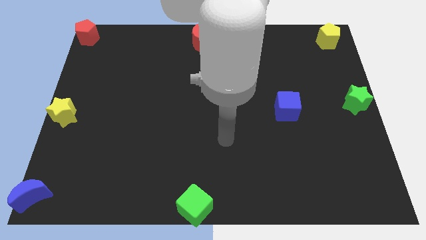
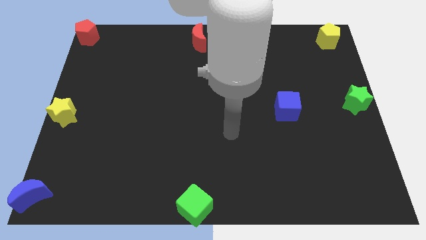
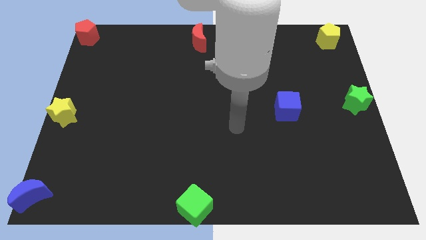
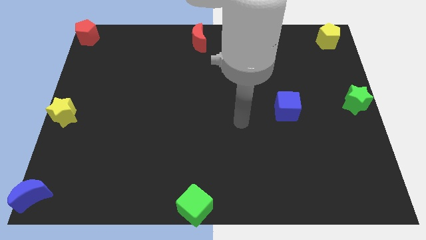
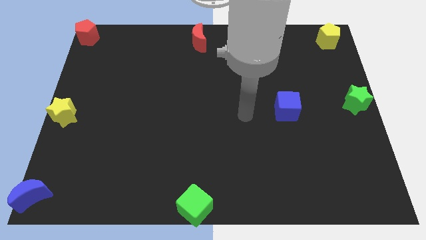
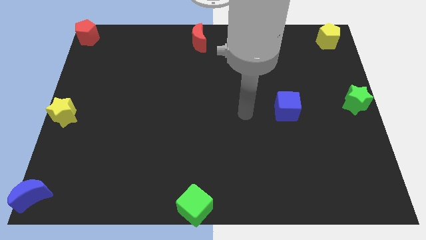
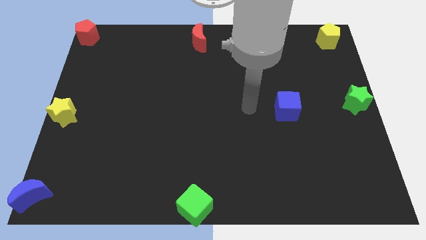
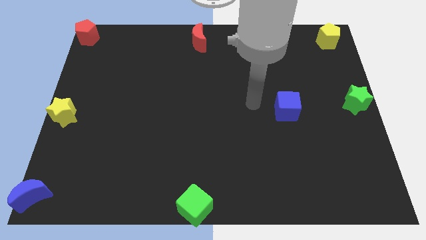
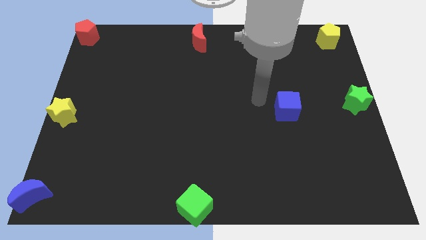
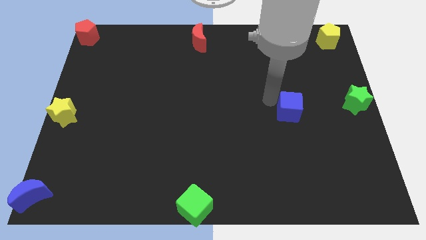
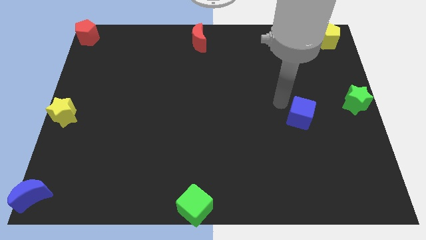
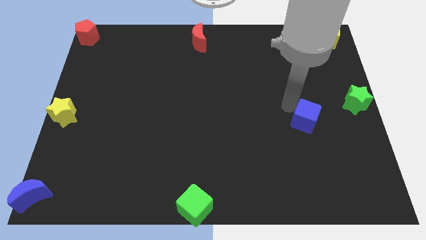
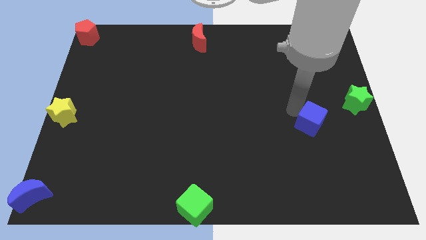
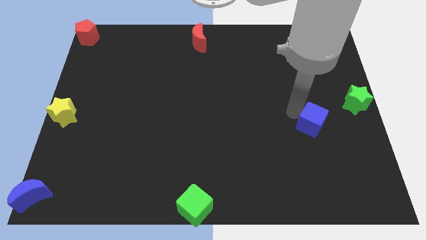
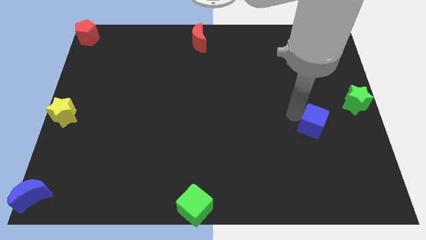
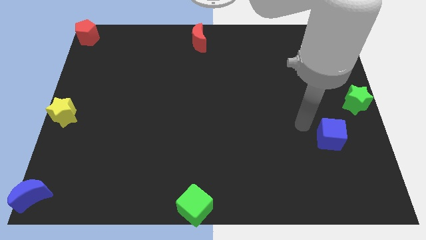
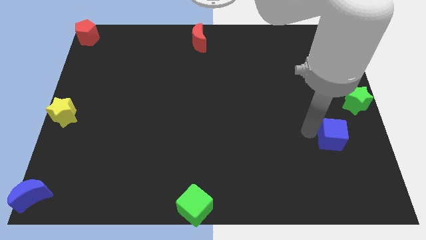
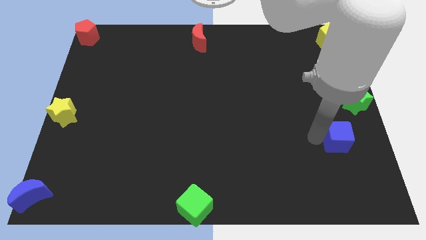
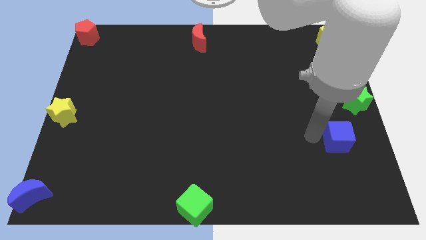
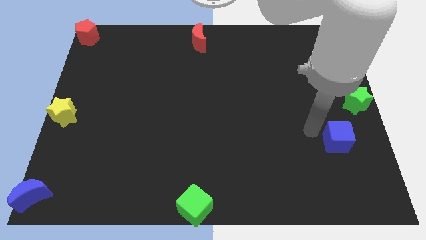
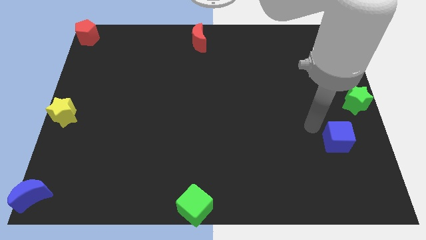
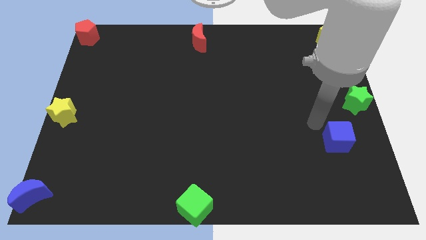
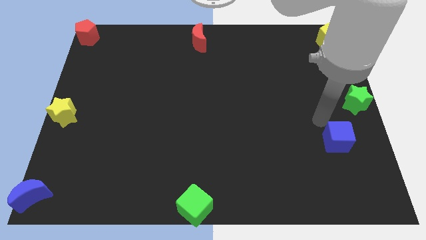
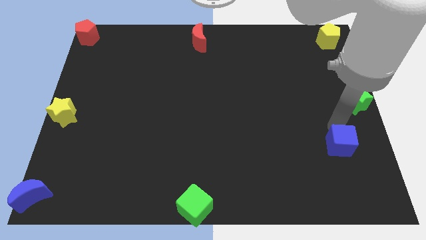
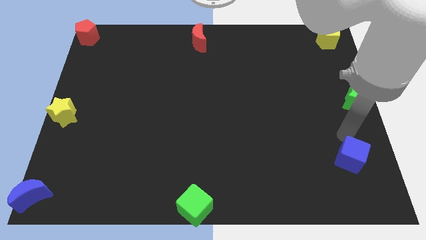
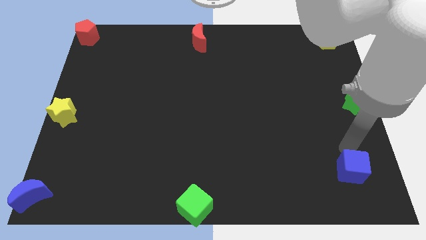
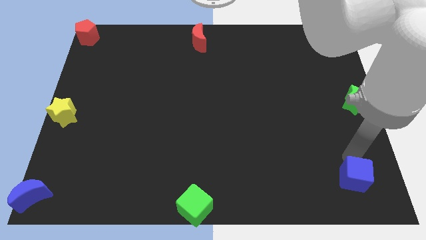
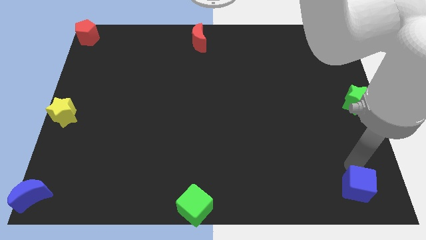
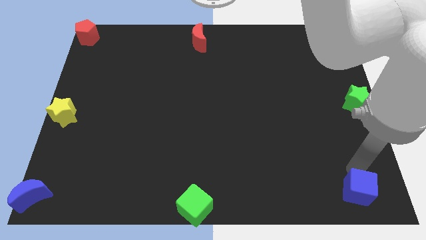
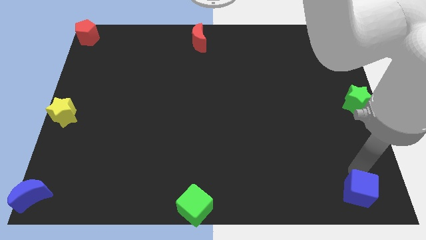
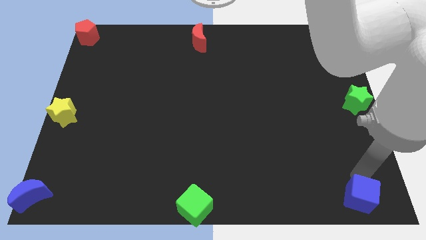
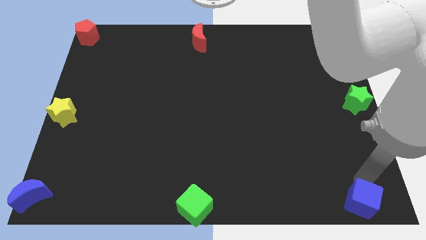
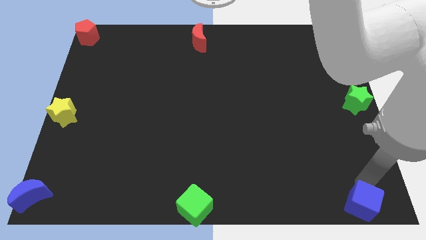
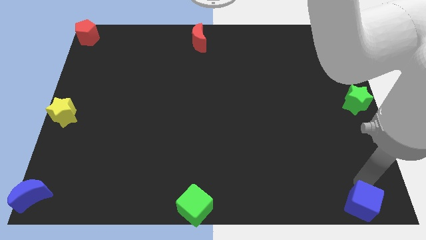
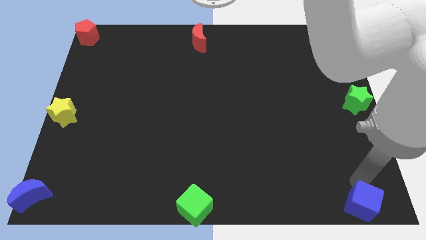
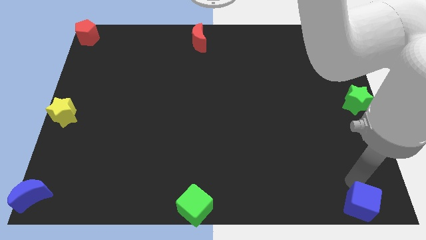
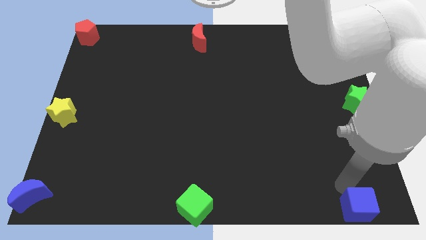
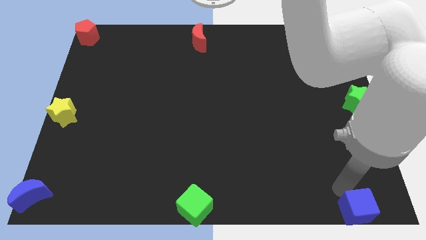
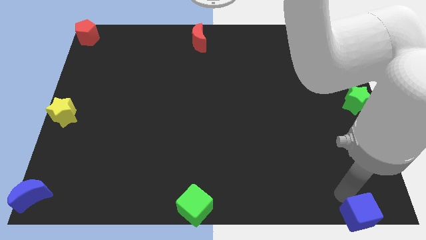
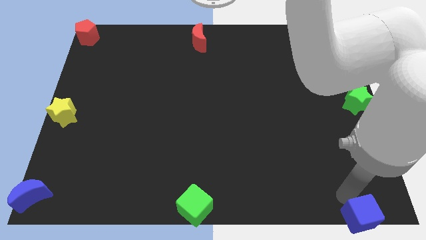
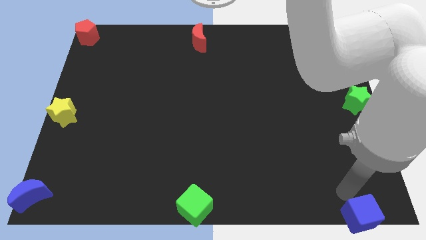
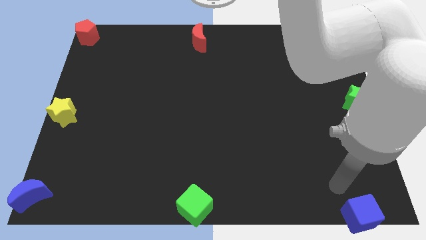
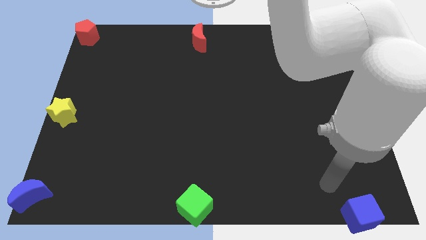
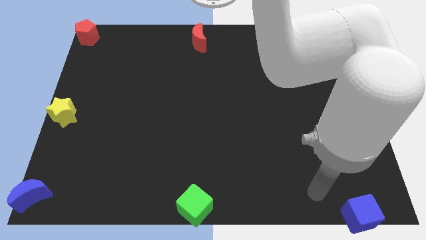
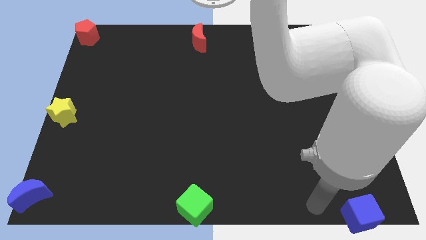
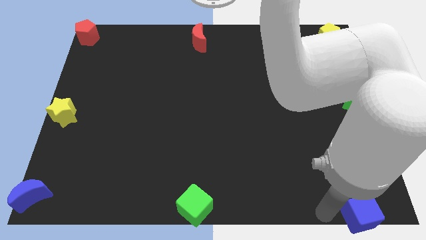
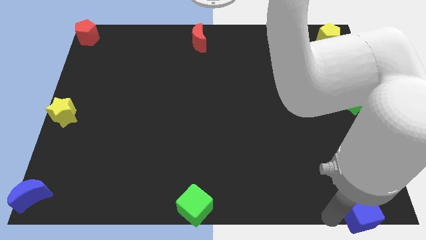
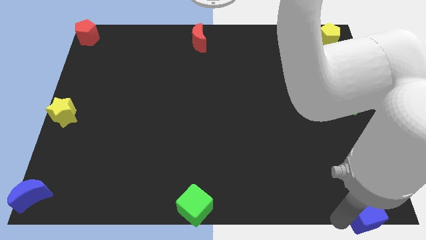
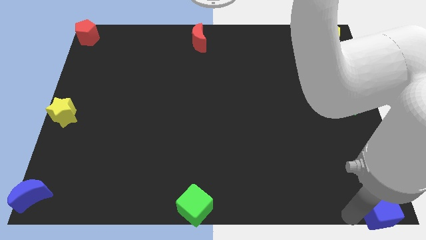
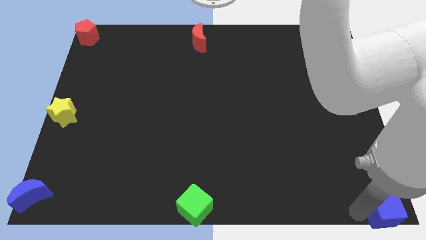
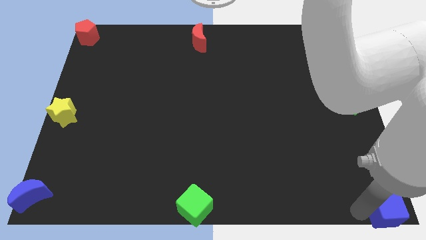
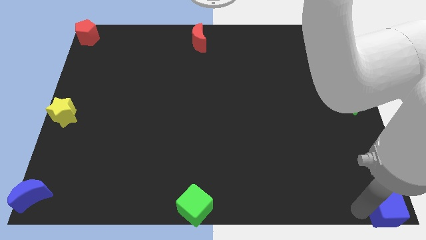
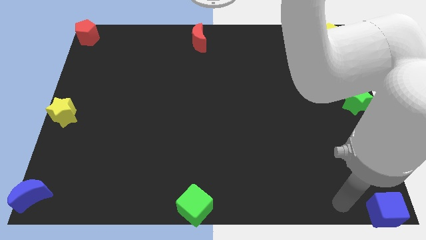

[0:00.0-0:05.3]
move the blue cube to the bottom right corner

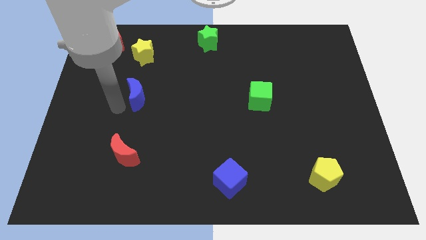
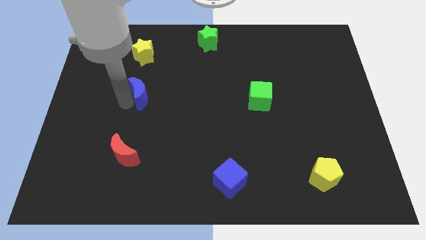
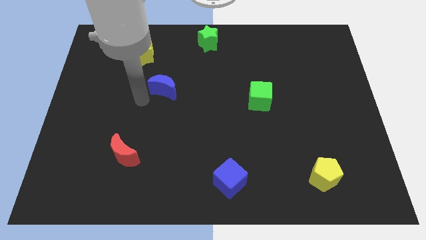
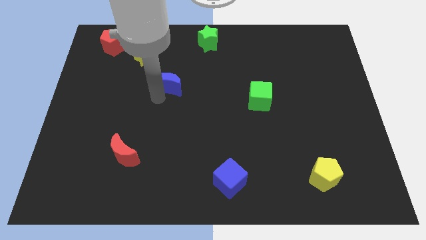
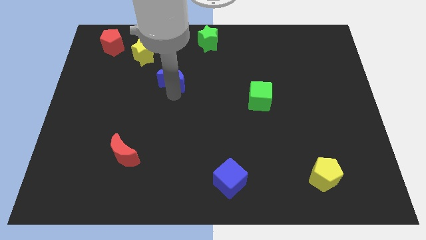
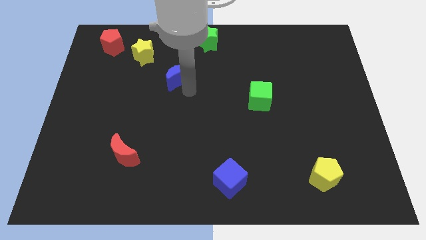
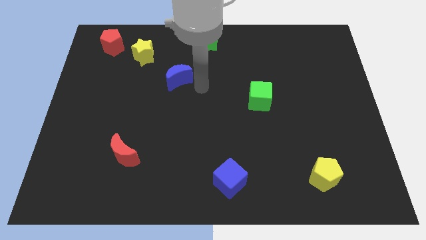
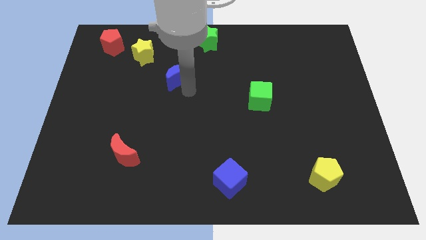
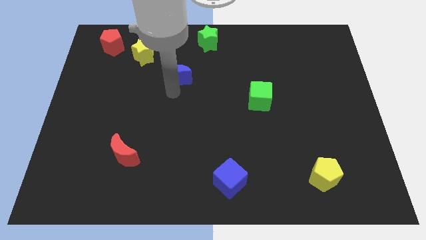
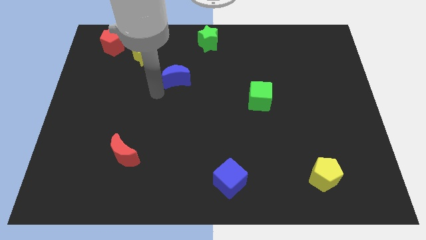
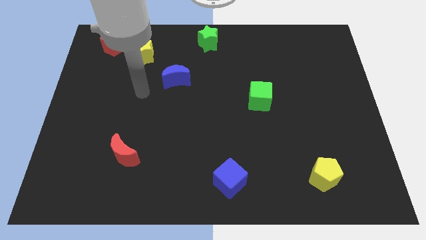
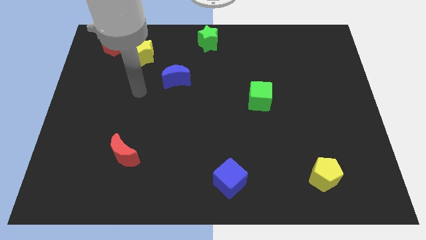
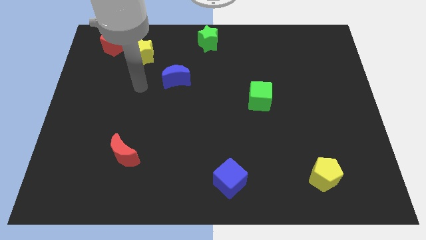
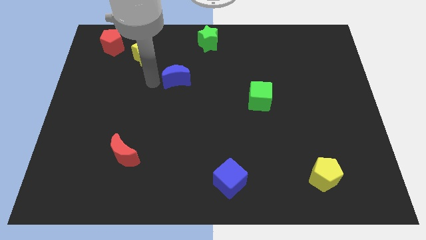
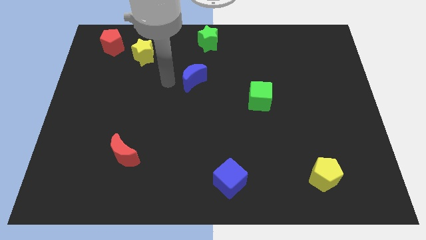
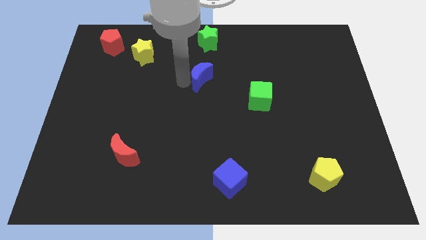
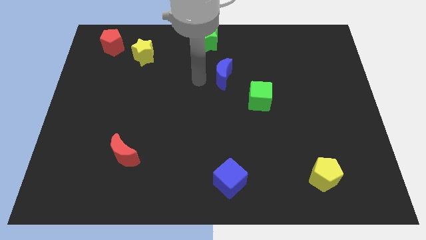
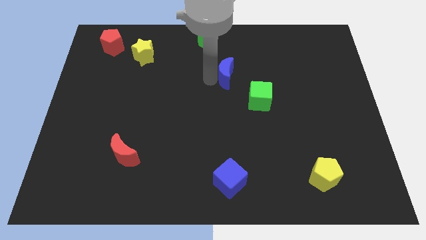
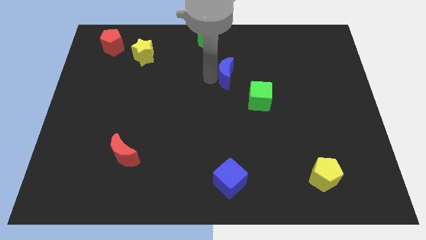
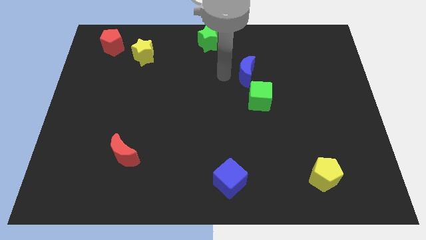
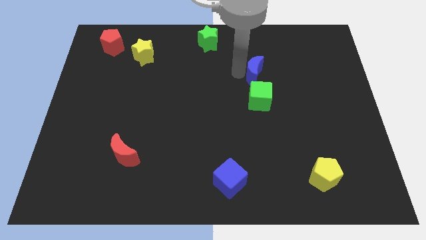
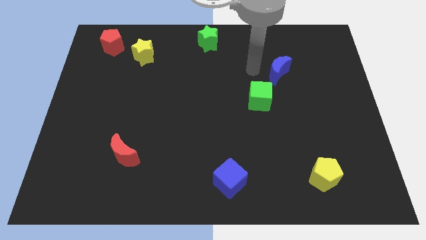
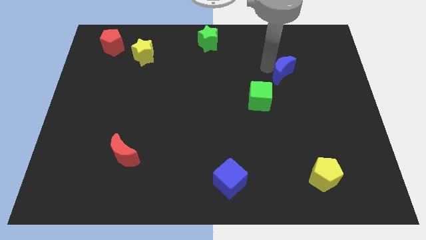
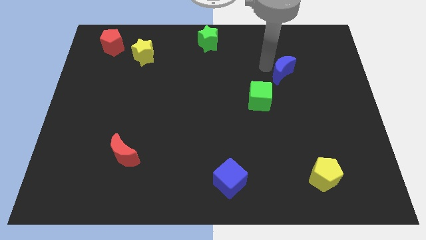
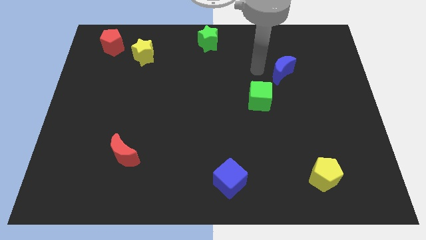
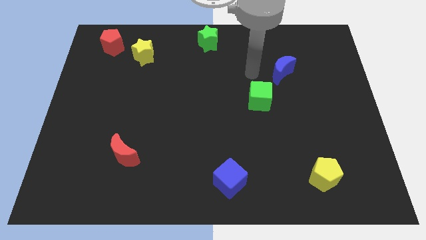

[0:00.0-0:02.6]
move the blue moon parallel to the green cube

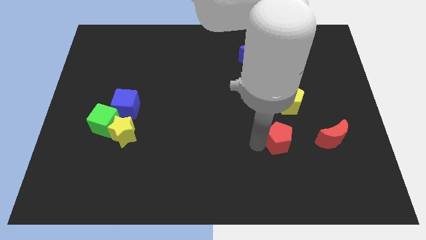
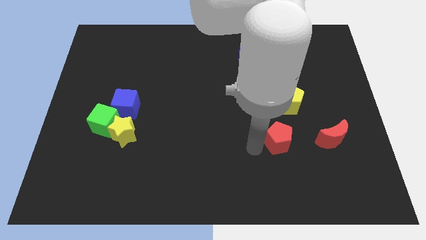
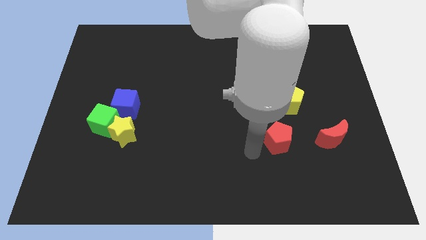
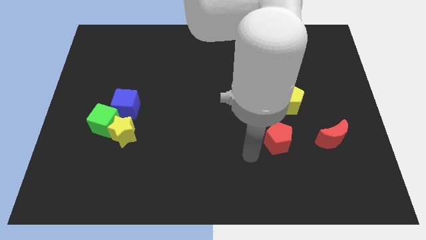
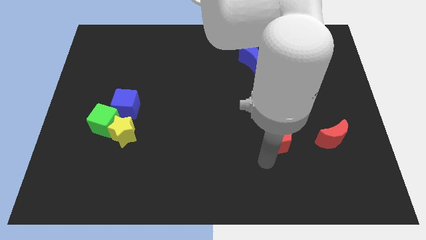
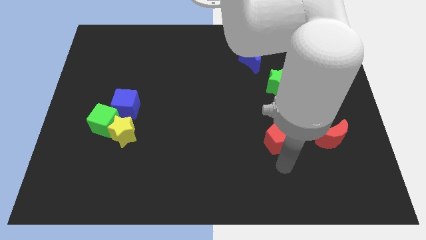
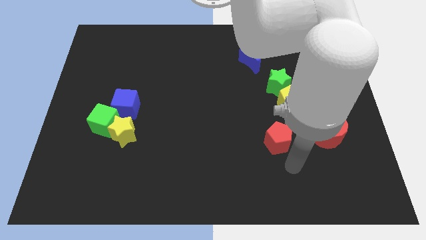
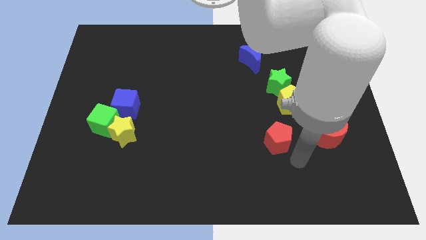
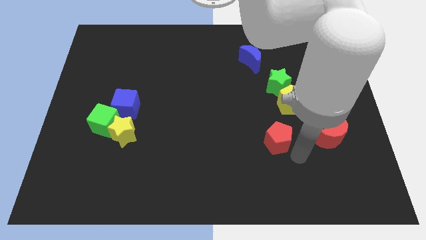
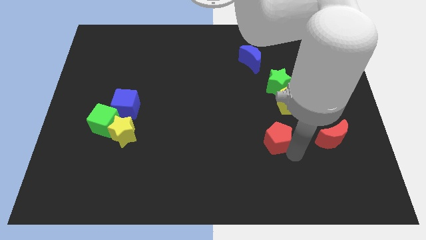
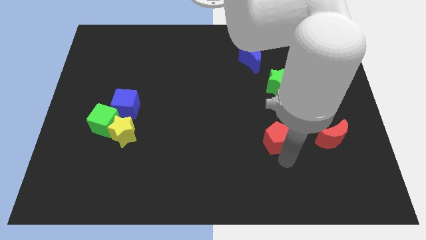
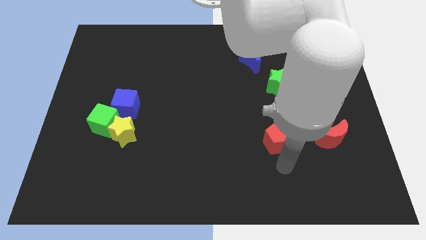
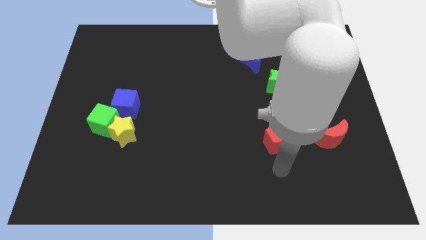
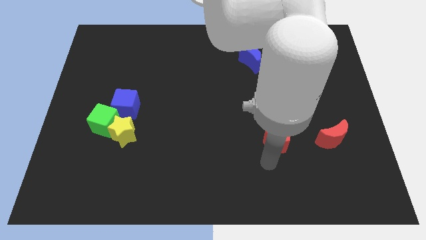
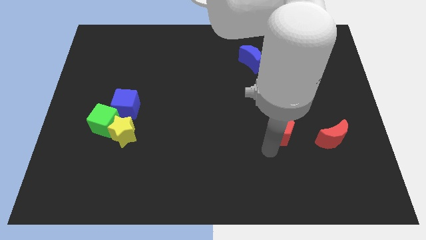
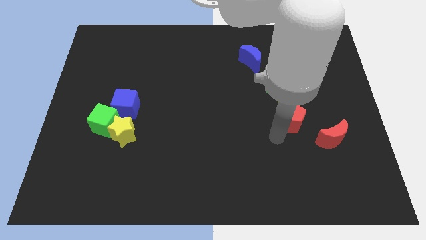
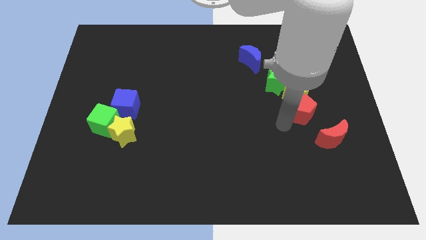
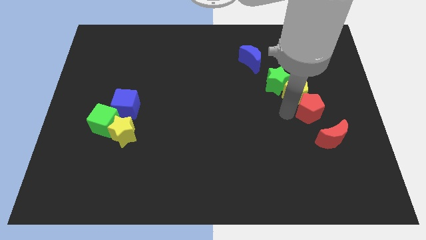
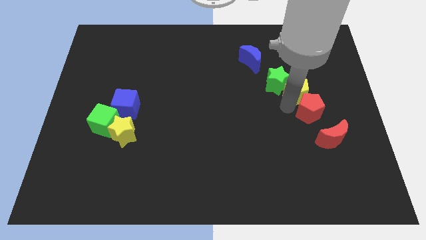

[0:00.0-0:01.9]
move the red pentagon into the yellow pentagon
